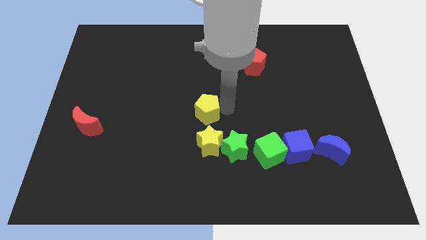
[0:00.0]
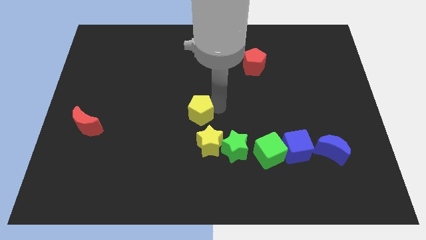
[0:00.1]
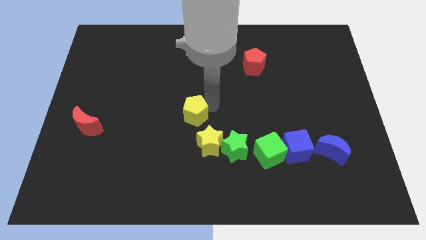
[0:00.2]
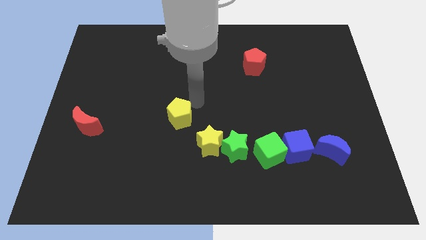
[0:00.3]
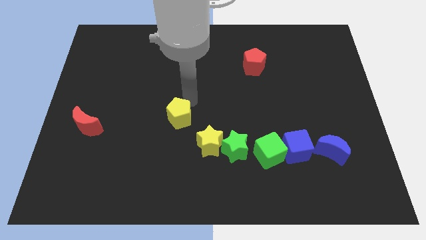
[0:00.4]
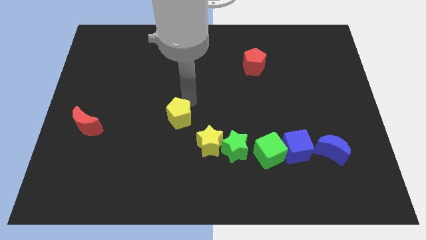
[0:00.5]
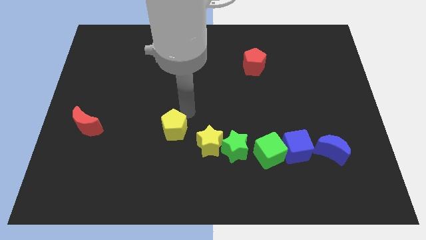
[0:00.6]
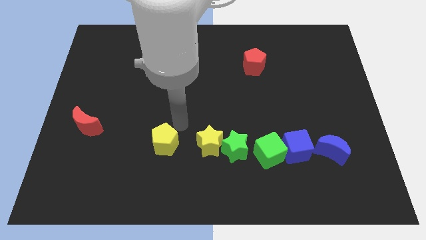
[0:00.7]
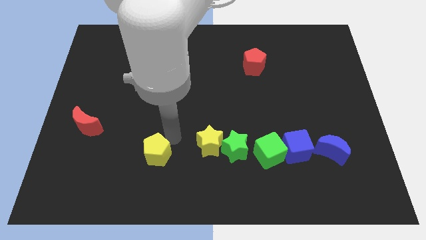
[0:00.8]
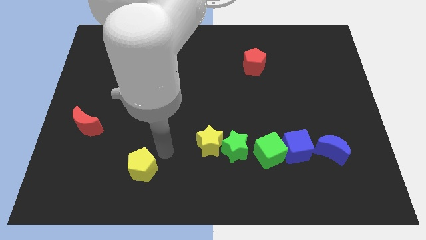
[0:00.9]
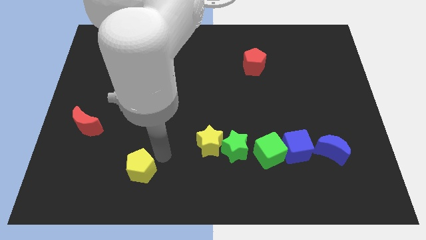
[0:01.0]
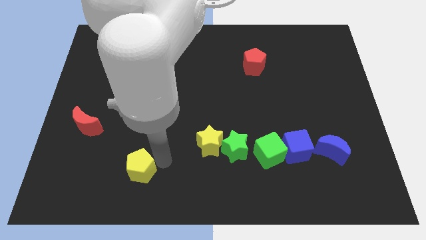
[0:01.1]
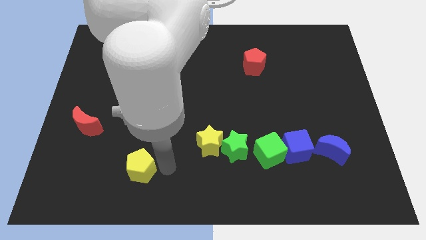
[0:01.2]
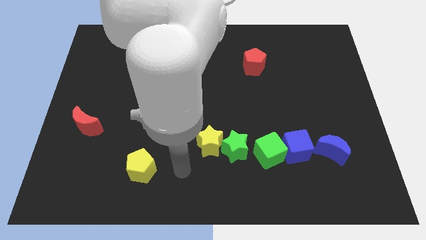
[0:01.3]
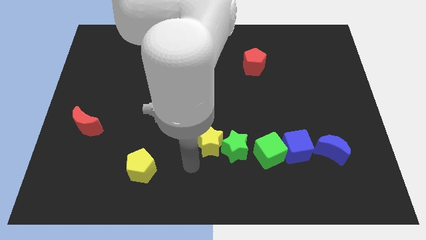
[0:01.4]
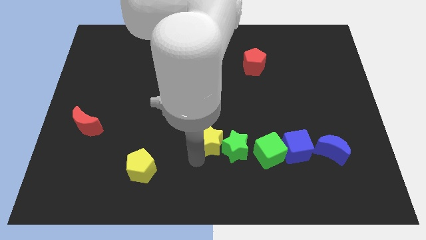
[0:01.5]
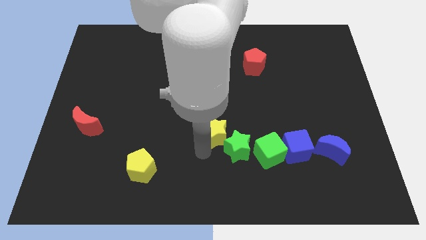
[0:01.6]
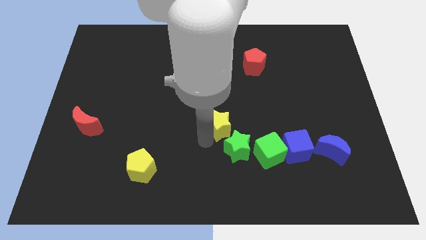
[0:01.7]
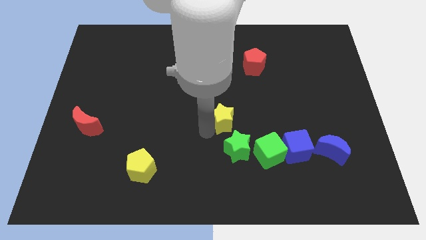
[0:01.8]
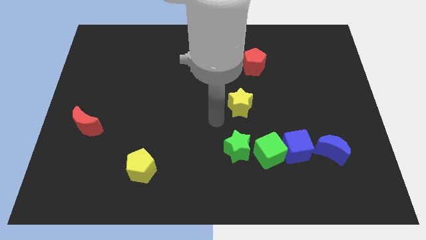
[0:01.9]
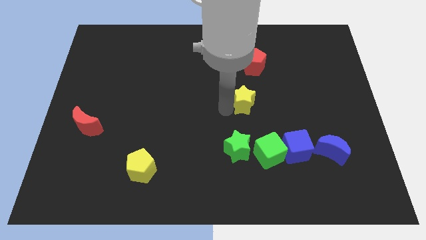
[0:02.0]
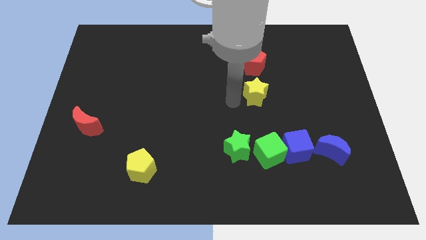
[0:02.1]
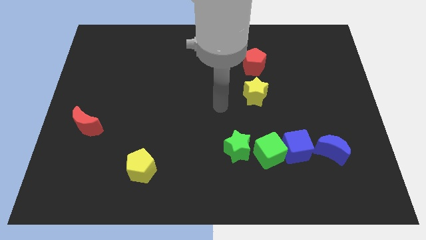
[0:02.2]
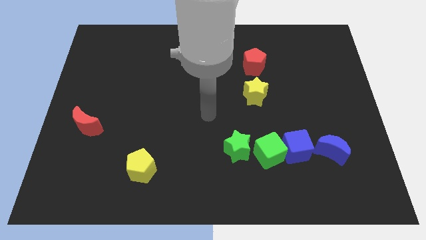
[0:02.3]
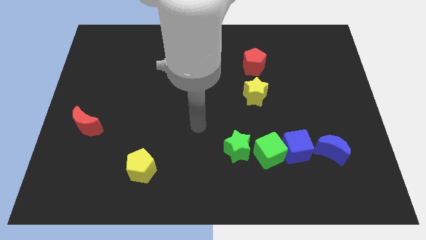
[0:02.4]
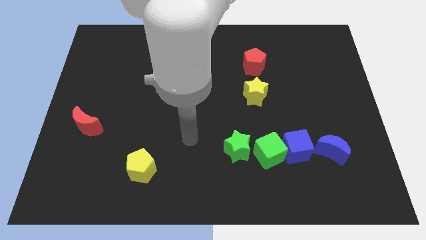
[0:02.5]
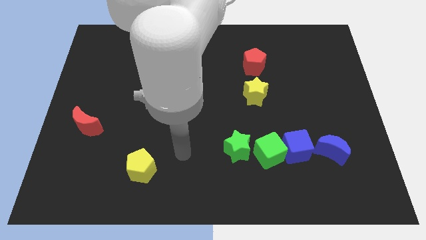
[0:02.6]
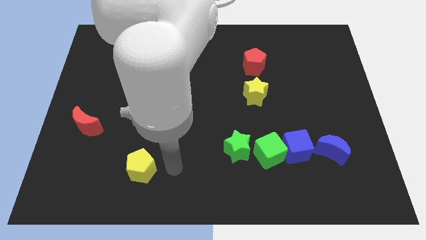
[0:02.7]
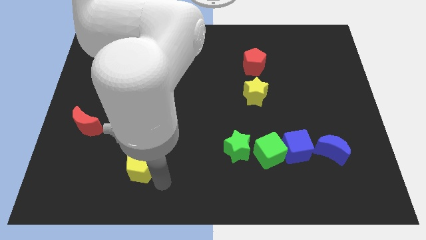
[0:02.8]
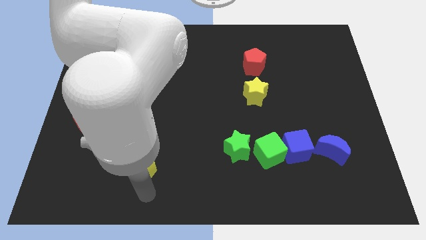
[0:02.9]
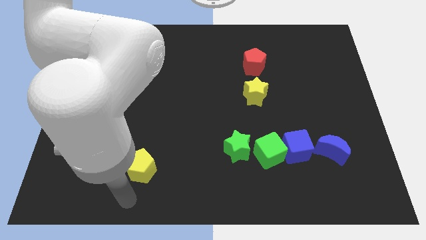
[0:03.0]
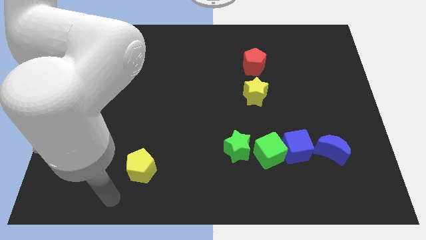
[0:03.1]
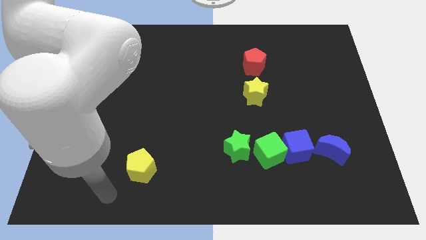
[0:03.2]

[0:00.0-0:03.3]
put the yellow blocks diagonal to each other

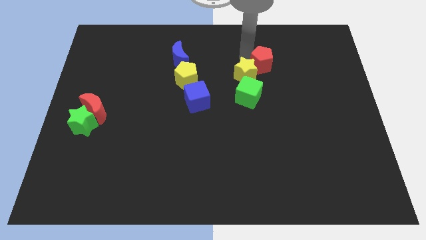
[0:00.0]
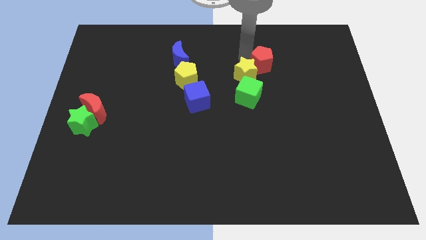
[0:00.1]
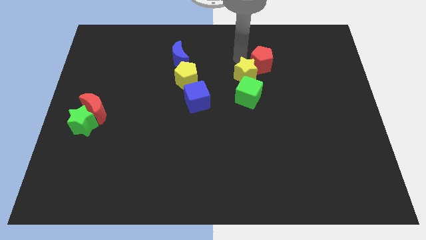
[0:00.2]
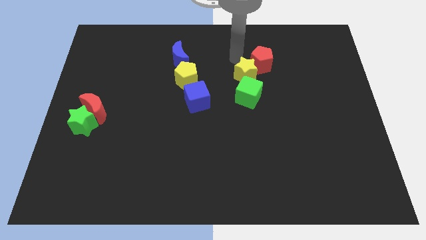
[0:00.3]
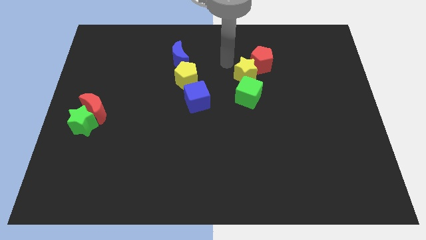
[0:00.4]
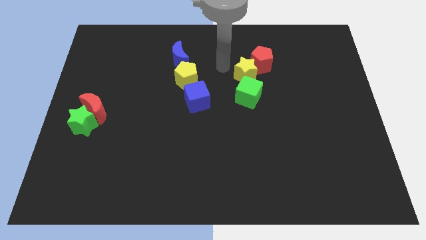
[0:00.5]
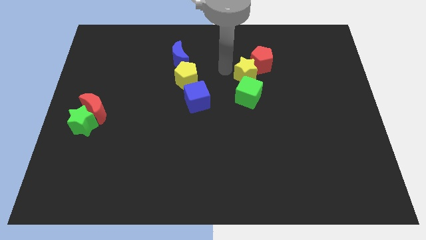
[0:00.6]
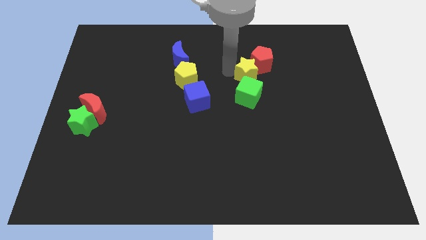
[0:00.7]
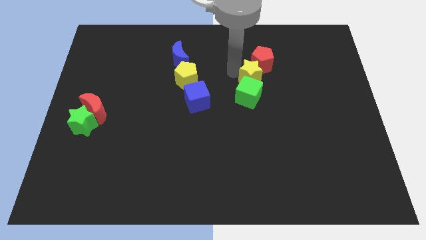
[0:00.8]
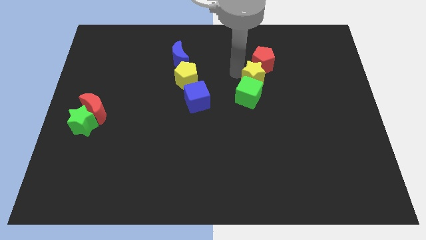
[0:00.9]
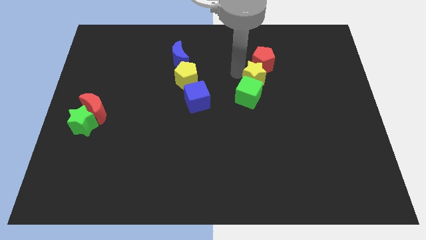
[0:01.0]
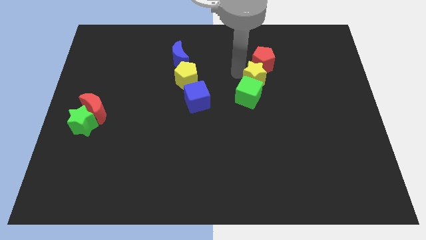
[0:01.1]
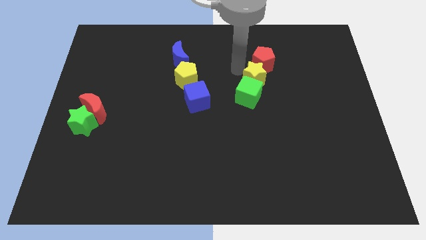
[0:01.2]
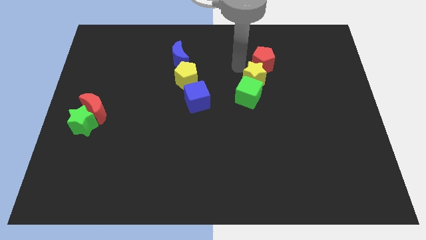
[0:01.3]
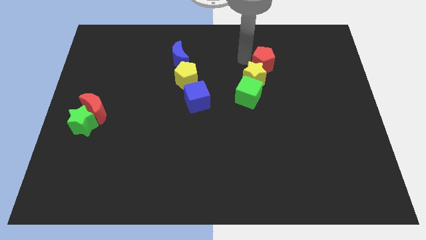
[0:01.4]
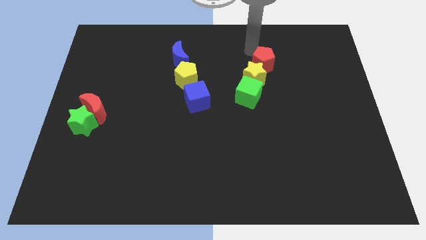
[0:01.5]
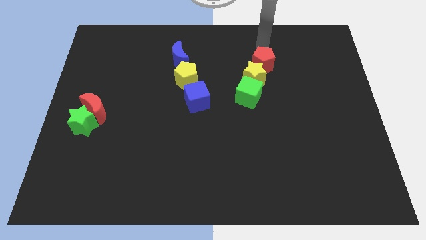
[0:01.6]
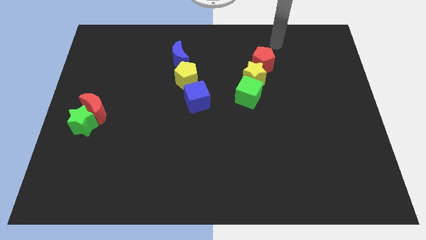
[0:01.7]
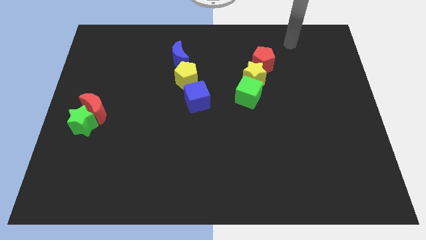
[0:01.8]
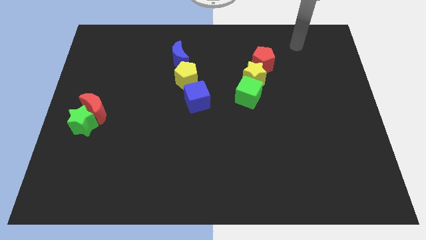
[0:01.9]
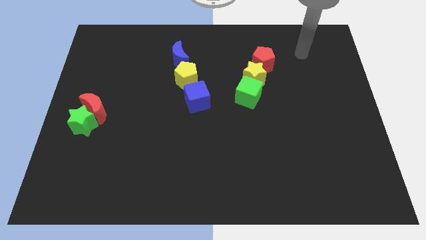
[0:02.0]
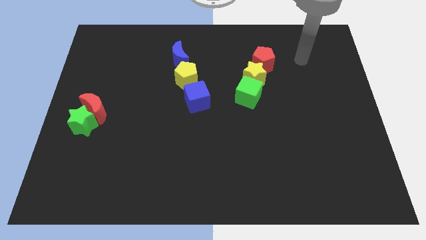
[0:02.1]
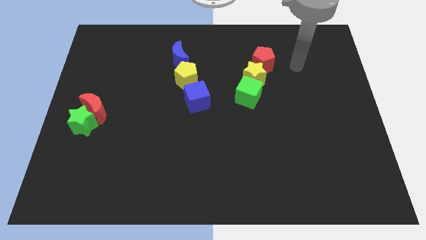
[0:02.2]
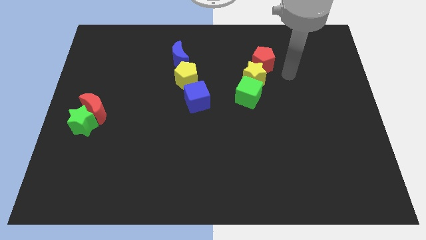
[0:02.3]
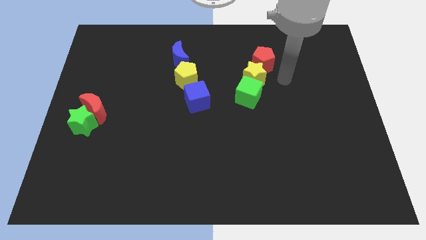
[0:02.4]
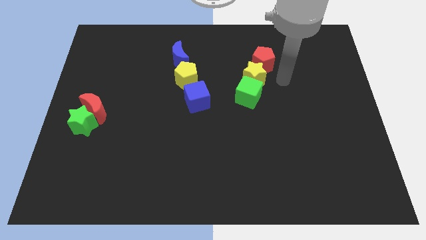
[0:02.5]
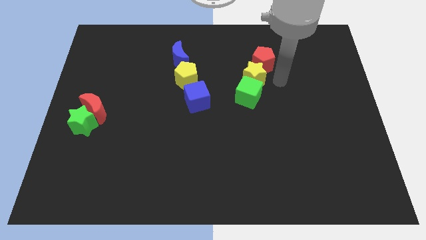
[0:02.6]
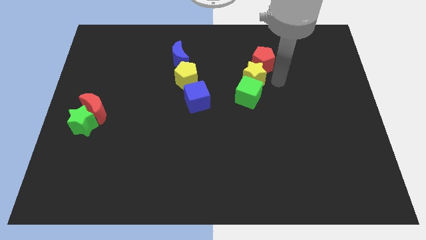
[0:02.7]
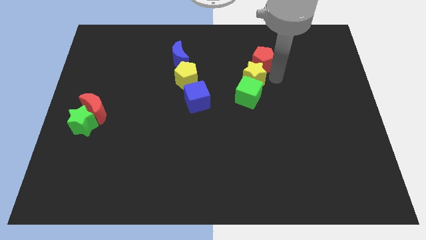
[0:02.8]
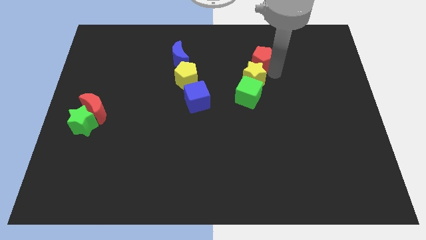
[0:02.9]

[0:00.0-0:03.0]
slightly push the yellow star in between the red pentagon and green cube

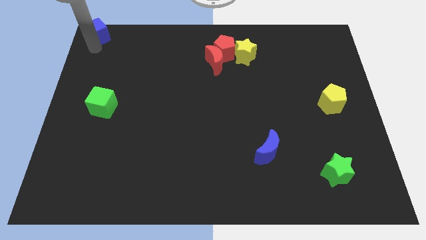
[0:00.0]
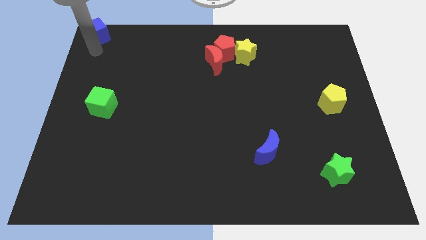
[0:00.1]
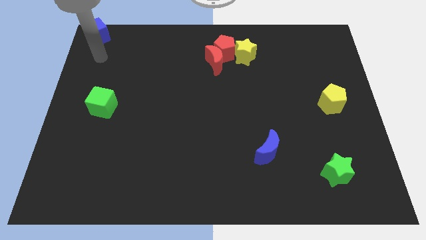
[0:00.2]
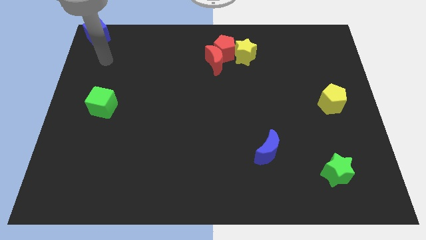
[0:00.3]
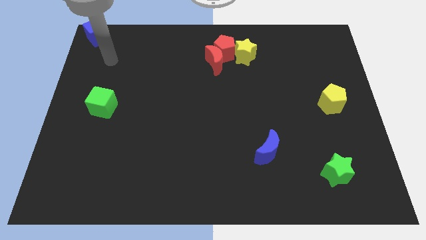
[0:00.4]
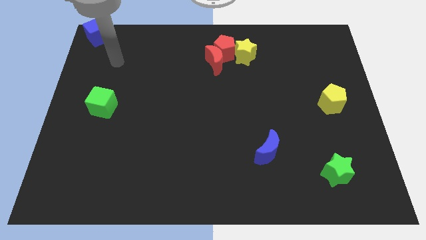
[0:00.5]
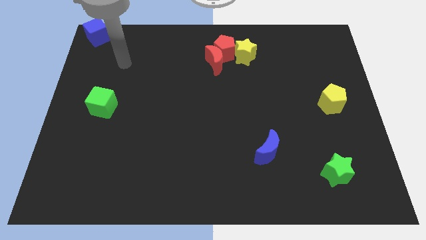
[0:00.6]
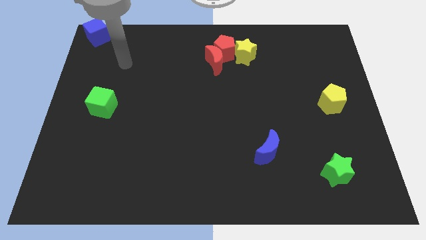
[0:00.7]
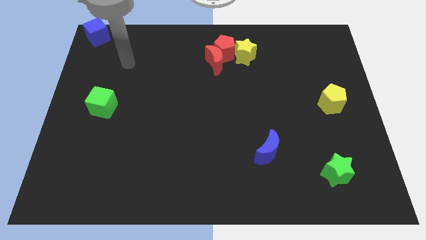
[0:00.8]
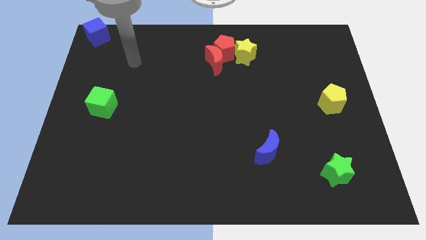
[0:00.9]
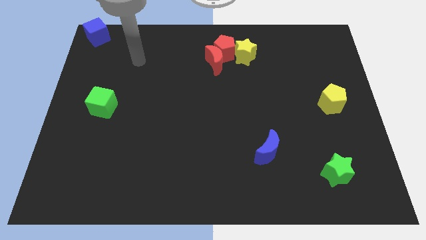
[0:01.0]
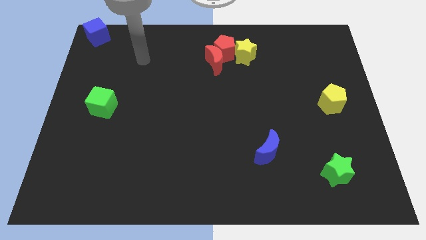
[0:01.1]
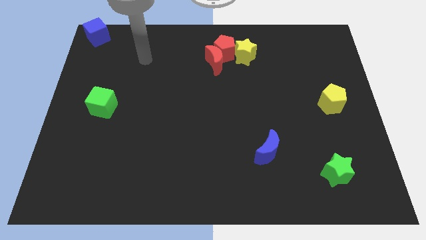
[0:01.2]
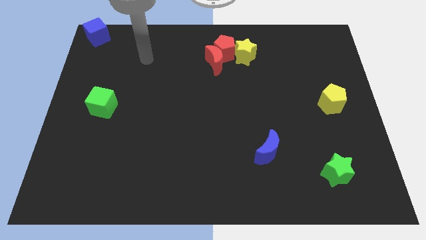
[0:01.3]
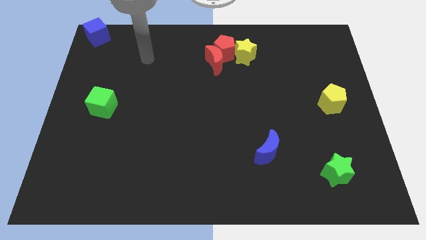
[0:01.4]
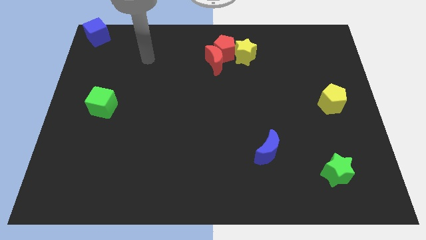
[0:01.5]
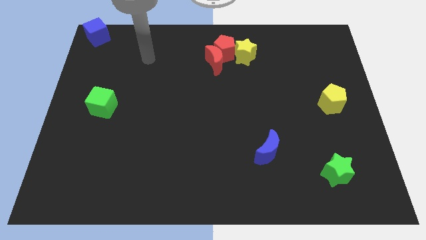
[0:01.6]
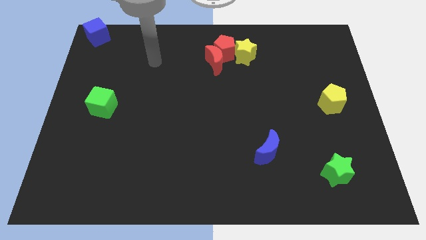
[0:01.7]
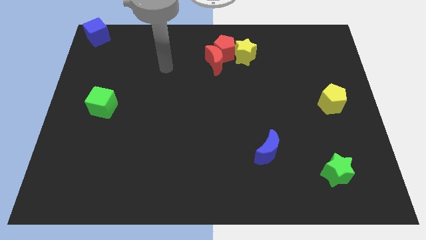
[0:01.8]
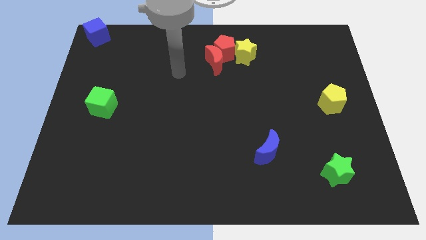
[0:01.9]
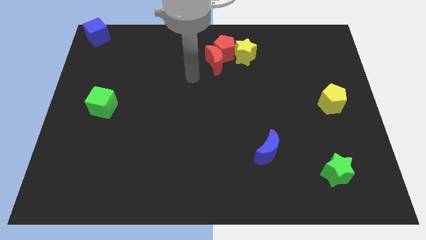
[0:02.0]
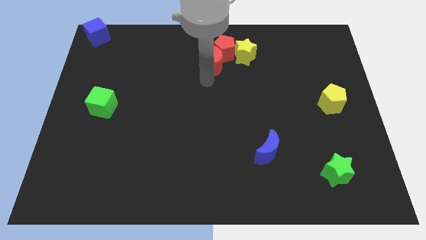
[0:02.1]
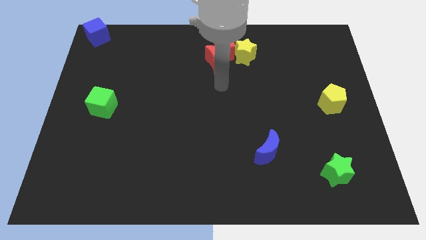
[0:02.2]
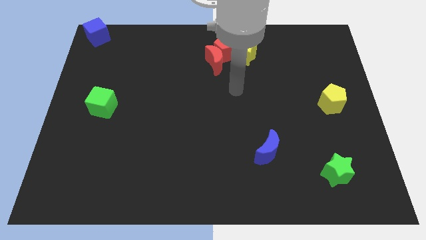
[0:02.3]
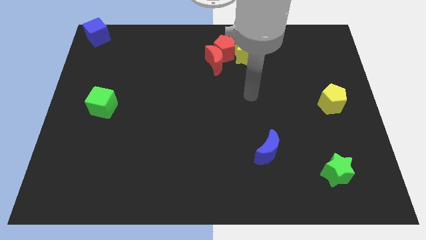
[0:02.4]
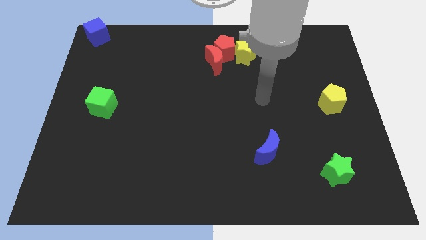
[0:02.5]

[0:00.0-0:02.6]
move the arm towards the center of the board
